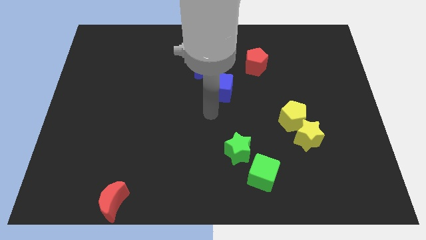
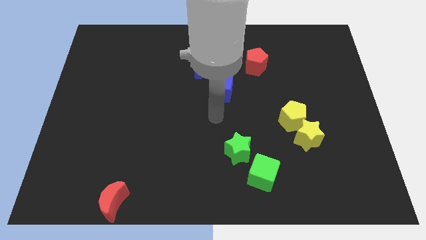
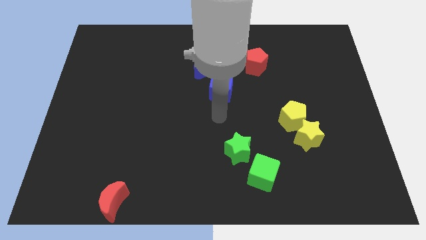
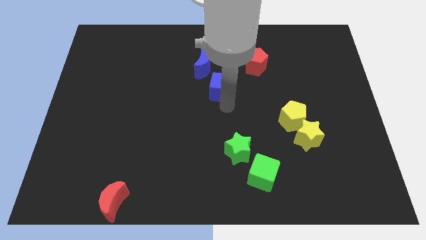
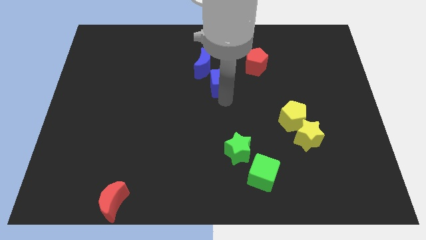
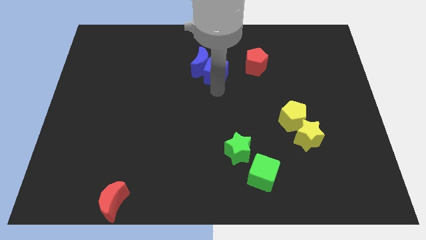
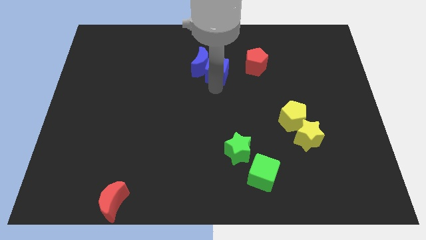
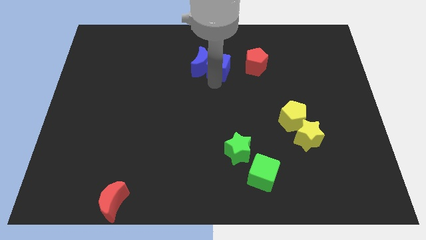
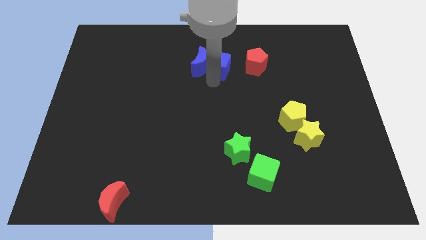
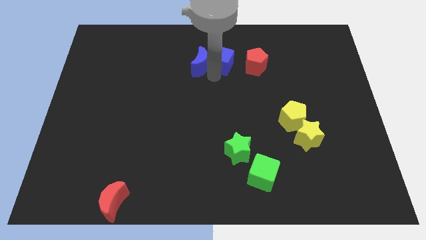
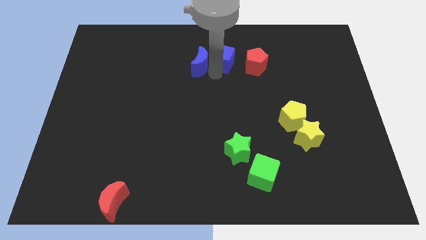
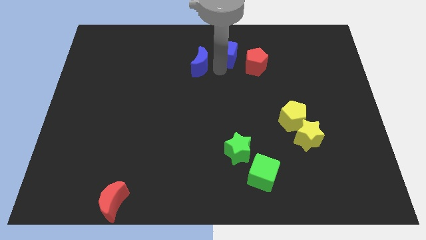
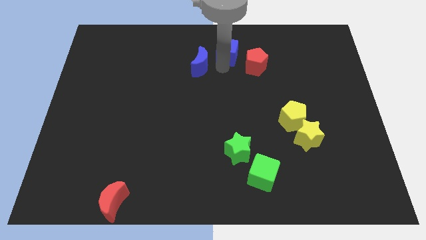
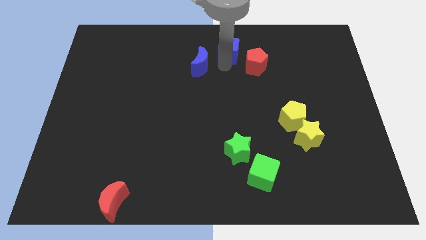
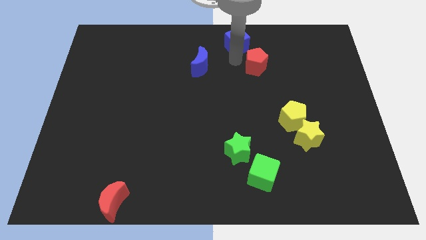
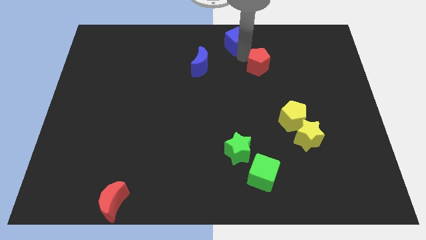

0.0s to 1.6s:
move the blue cube above the green star

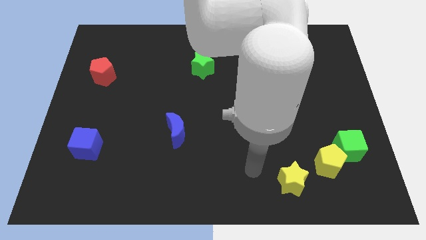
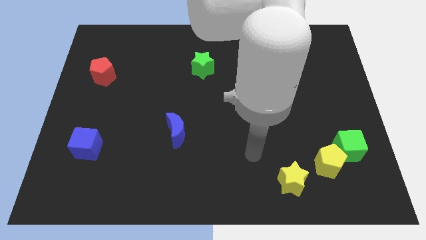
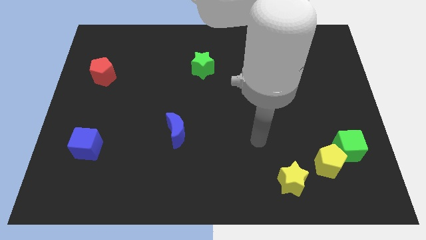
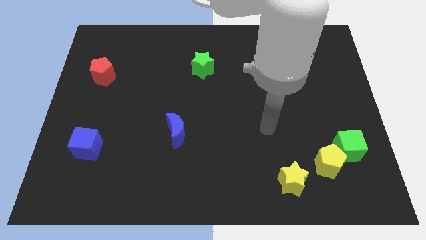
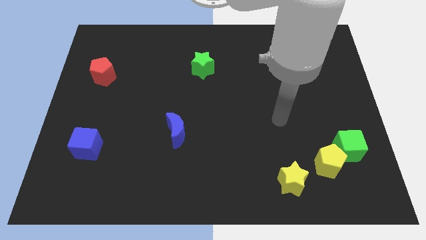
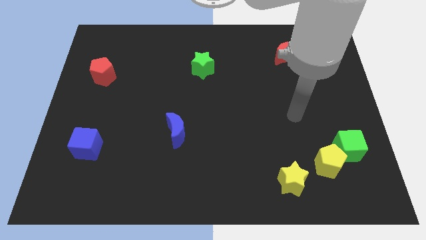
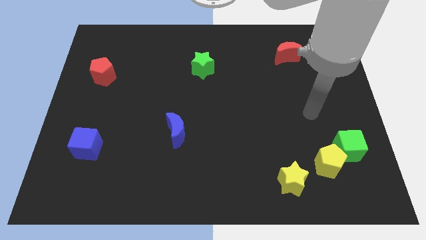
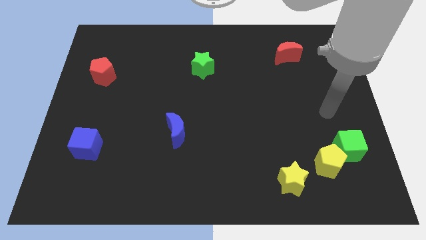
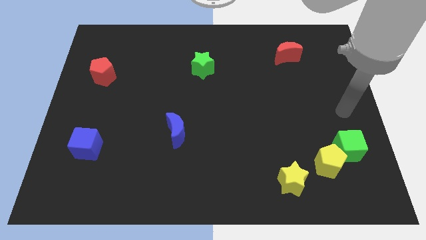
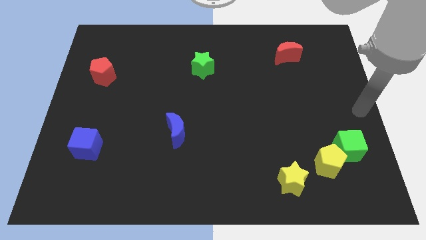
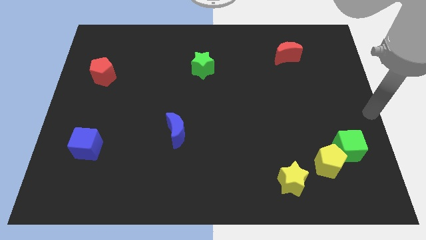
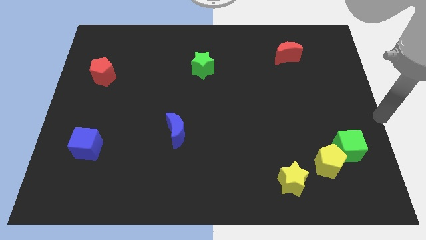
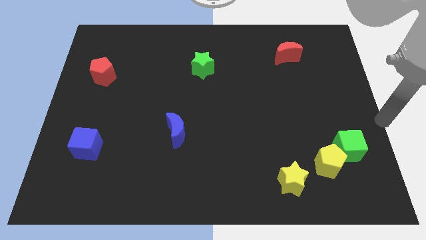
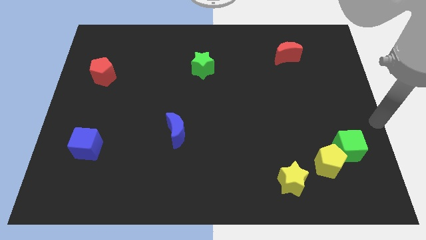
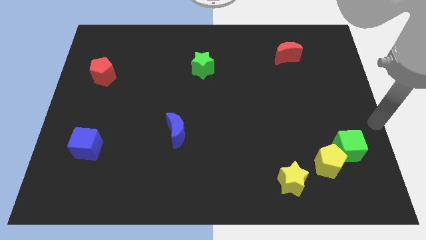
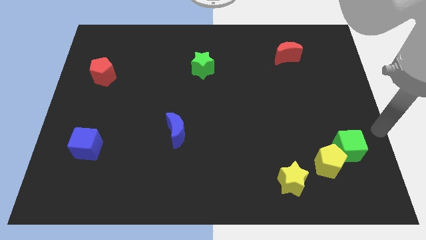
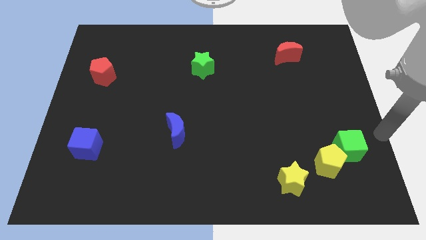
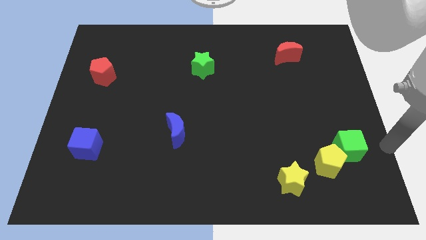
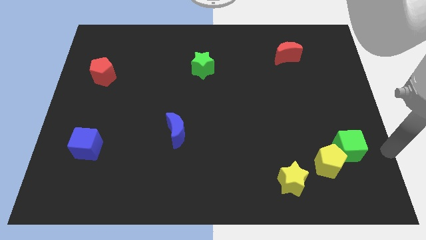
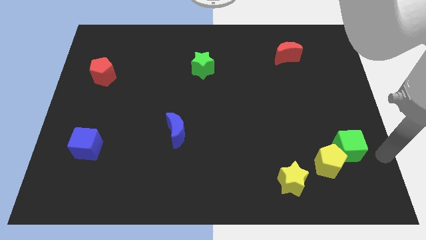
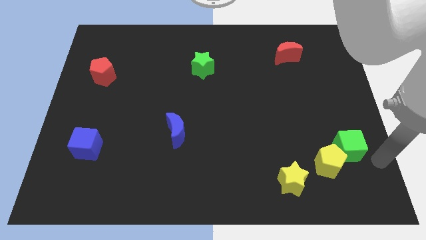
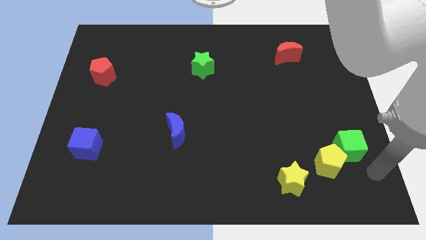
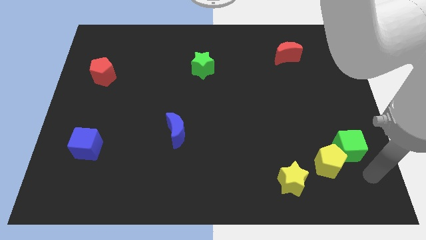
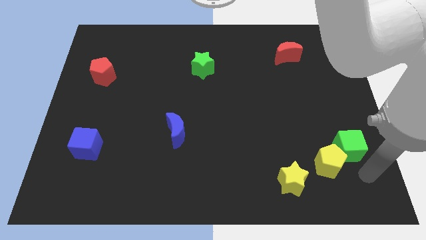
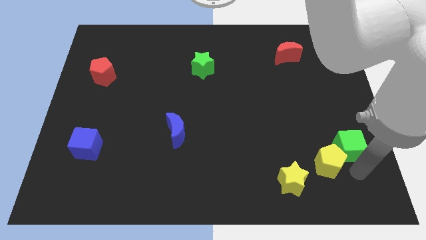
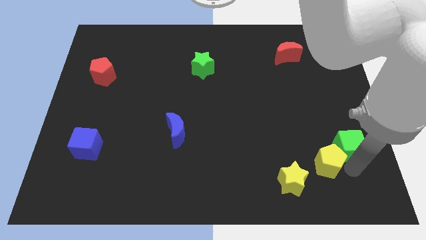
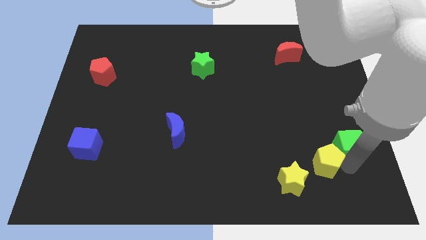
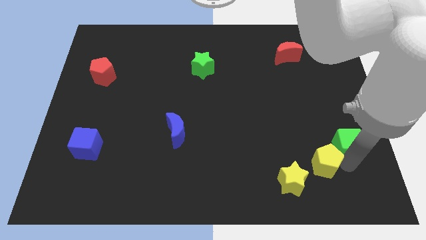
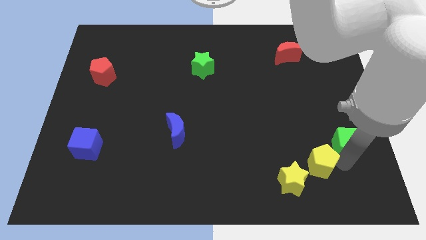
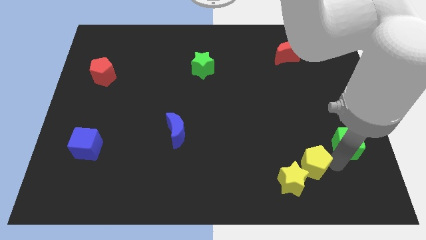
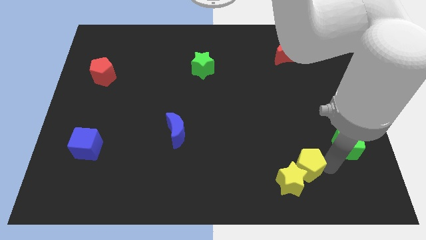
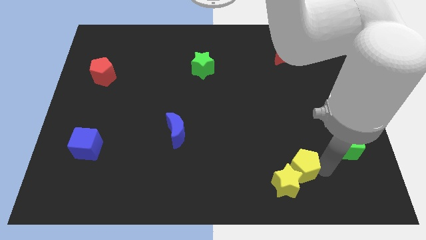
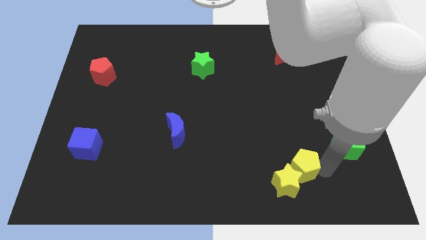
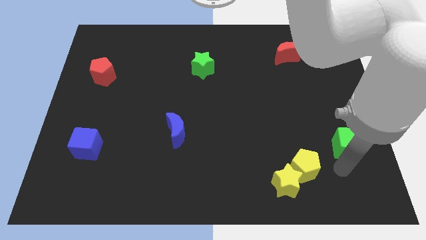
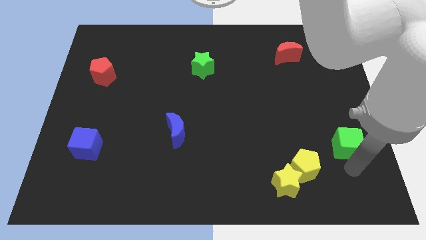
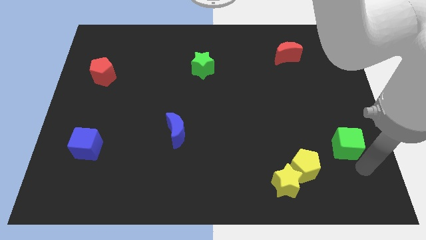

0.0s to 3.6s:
move the yellow pentagon into the top right side of the yellow star

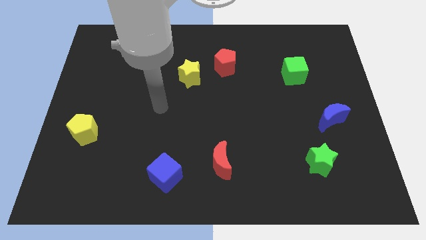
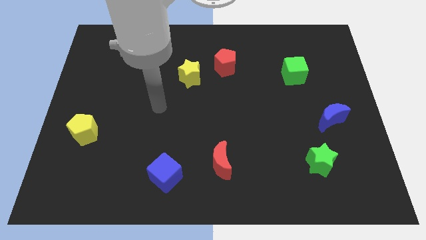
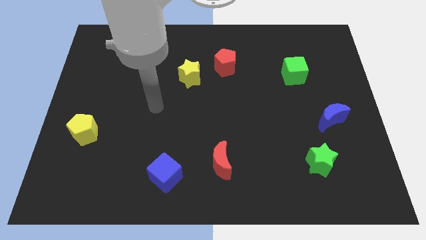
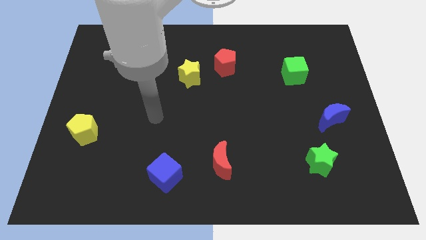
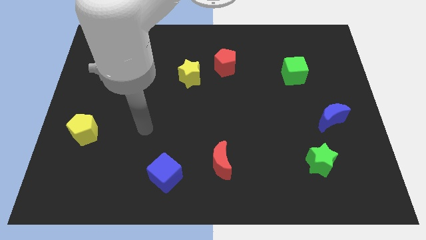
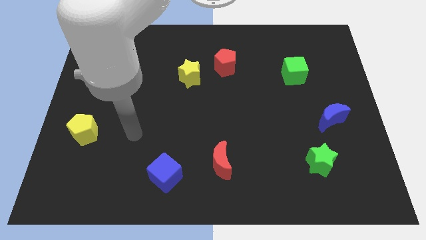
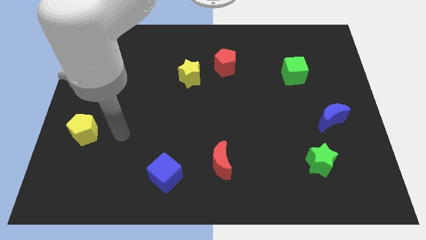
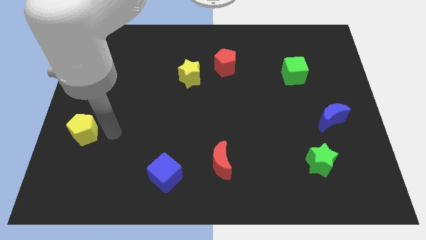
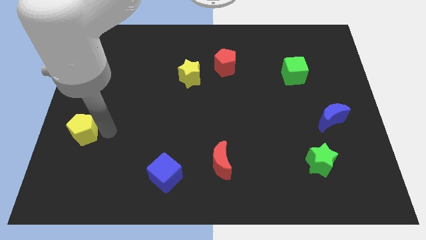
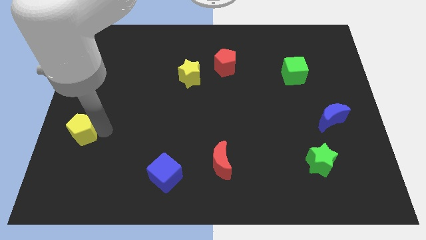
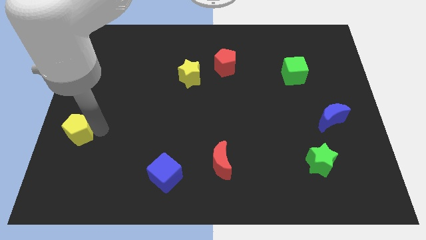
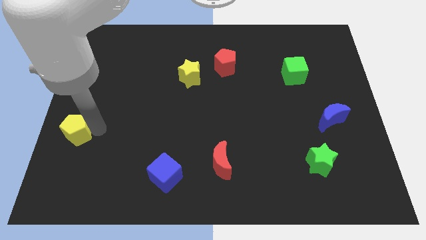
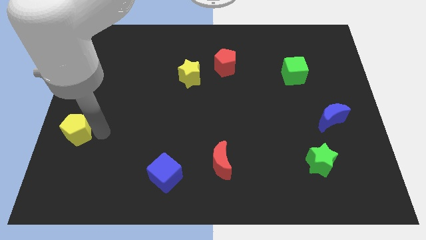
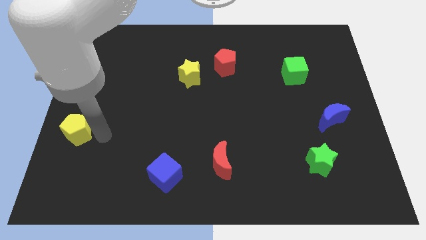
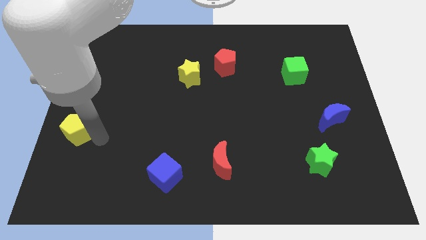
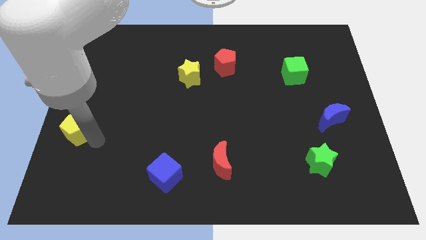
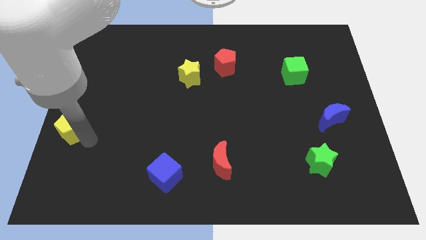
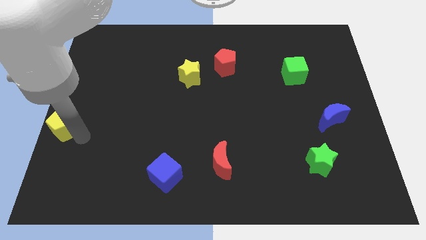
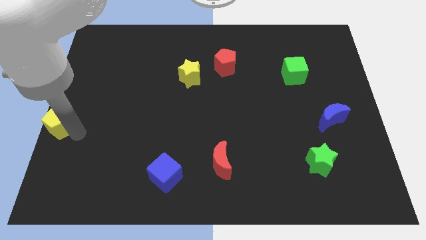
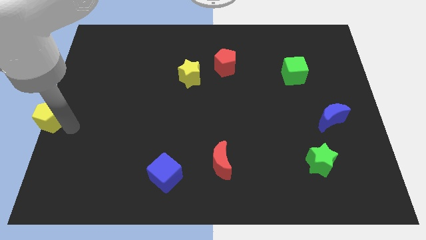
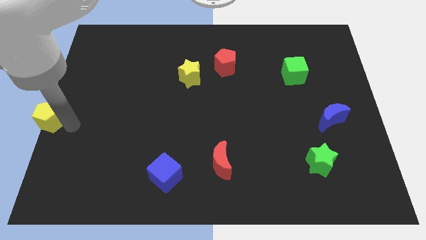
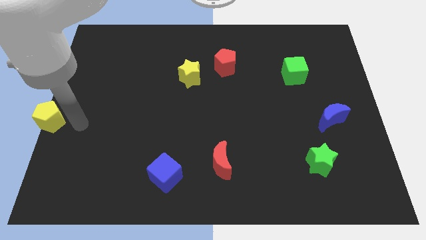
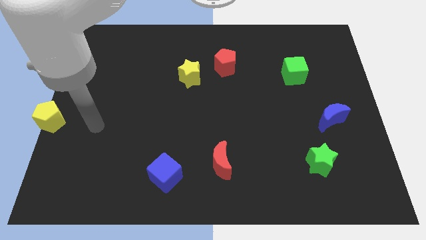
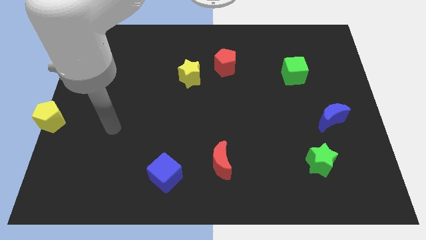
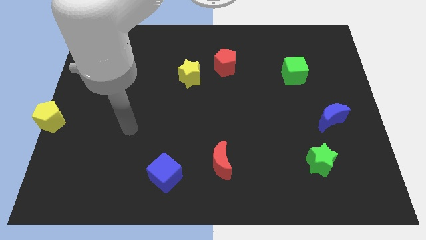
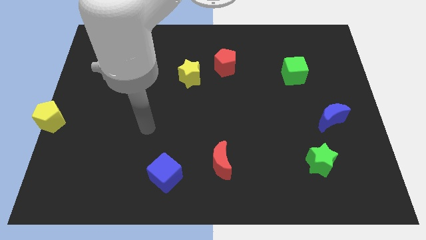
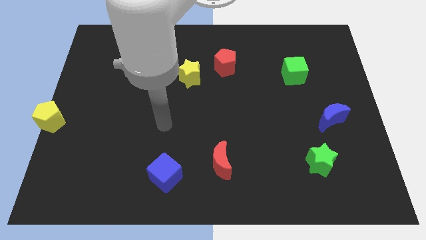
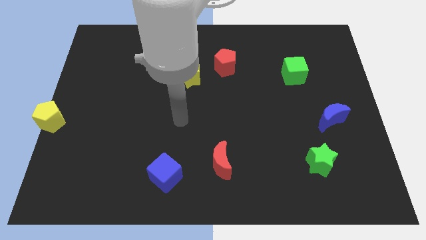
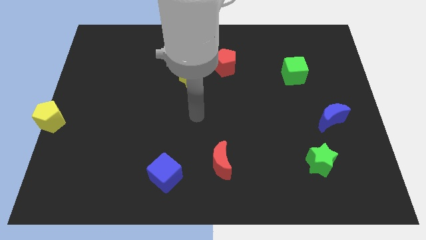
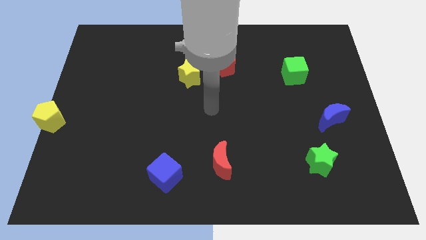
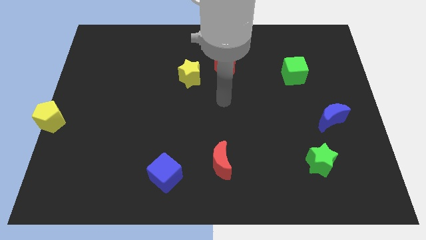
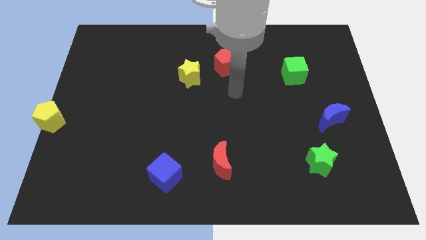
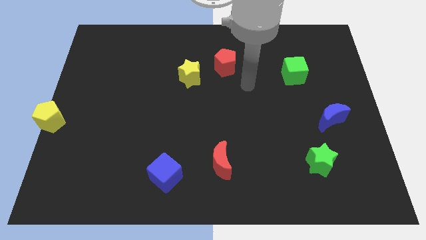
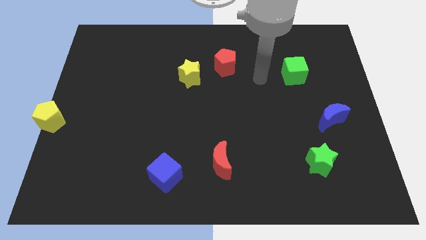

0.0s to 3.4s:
place the yellow pentagon at the center left side of the board

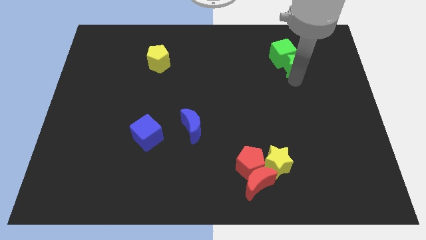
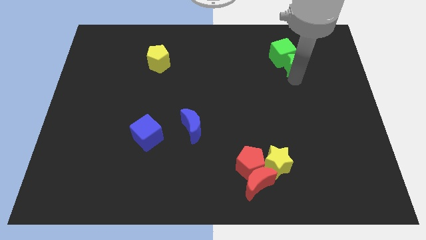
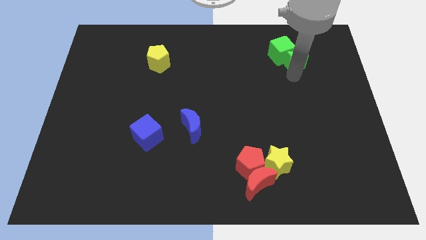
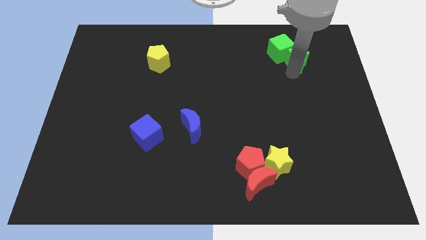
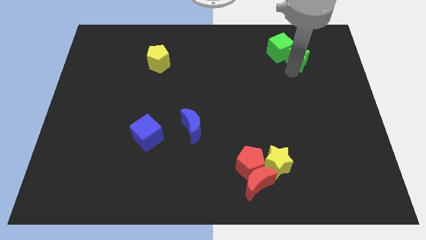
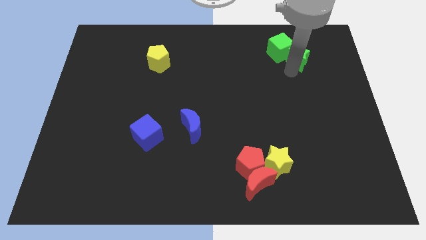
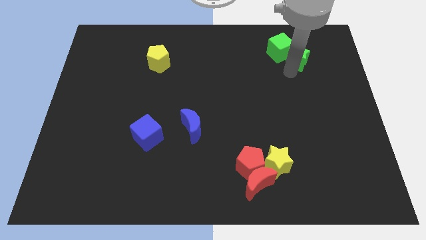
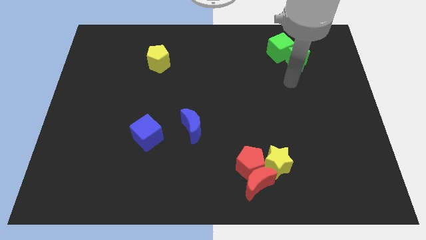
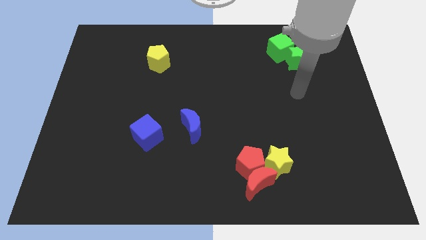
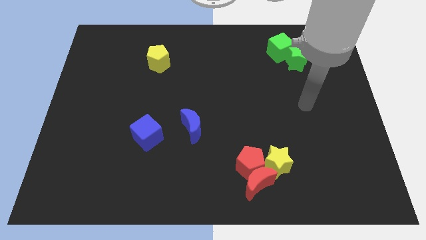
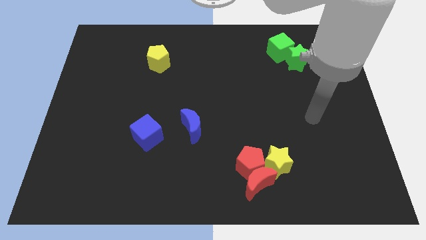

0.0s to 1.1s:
slightly push the green blocks towards up
